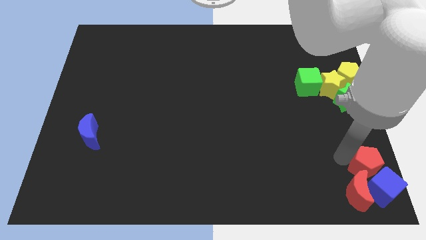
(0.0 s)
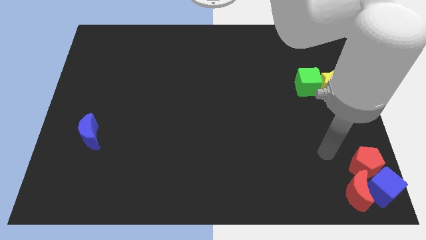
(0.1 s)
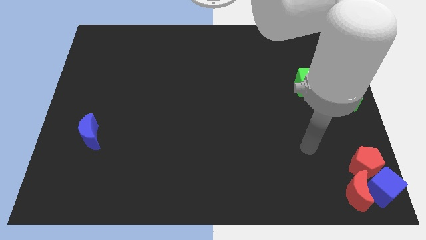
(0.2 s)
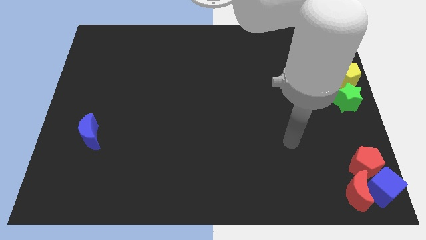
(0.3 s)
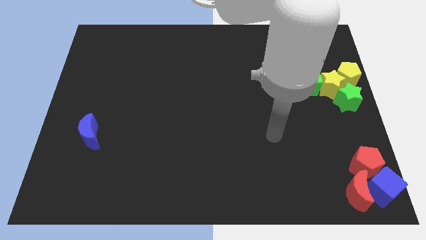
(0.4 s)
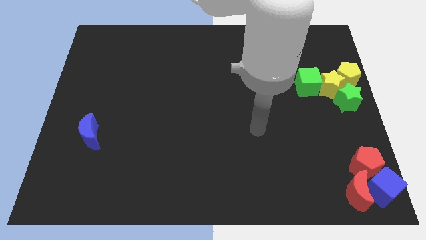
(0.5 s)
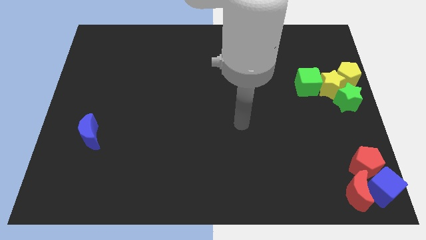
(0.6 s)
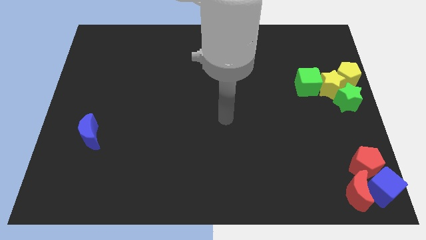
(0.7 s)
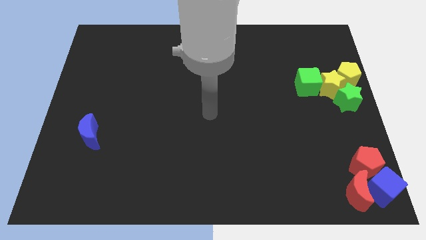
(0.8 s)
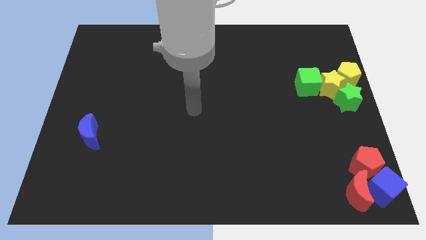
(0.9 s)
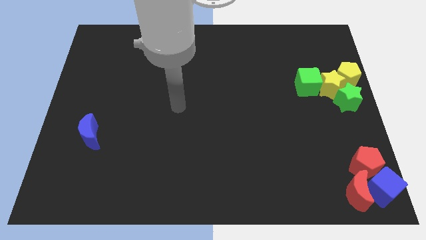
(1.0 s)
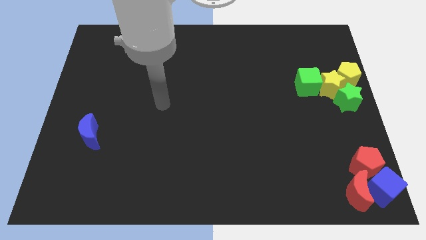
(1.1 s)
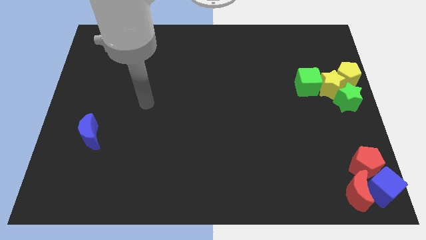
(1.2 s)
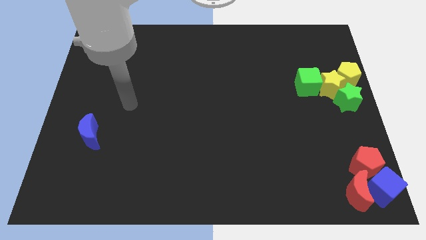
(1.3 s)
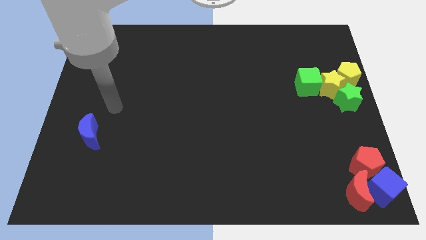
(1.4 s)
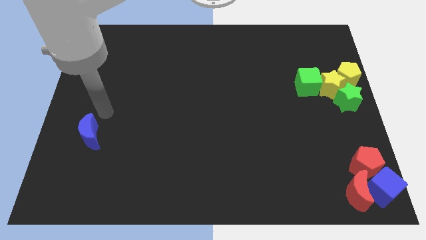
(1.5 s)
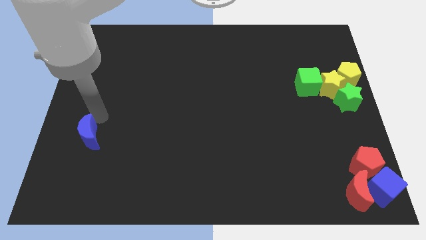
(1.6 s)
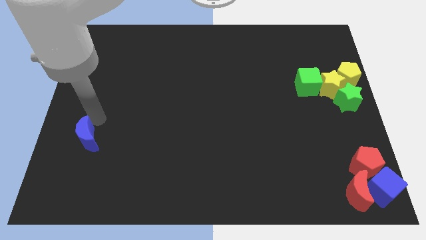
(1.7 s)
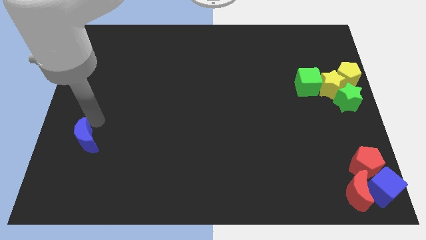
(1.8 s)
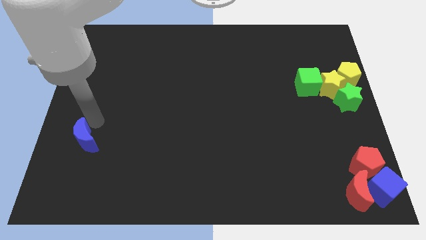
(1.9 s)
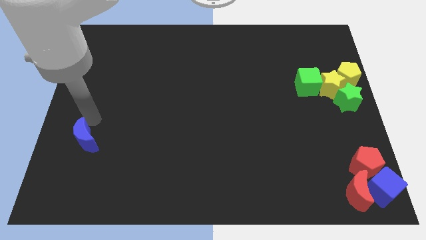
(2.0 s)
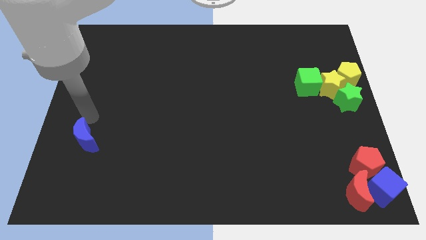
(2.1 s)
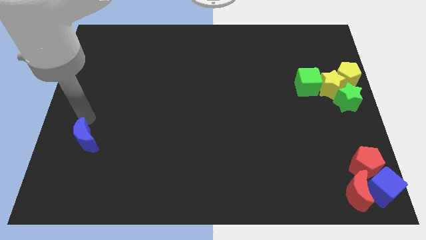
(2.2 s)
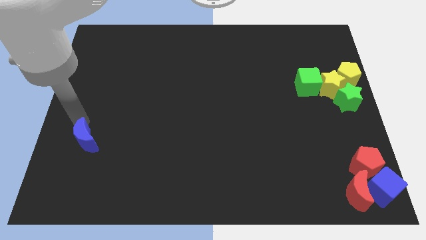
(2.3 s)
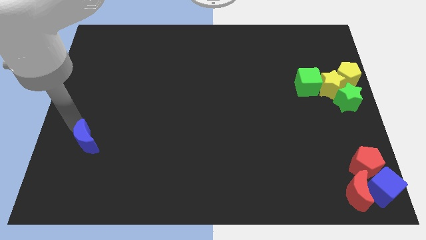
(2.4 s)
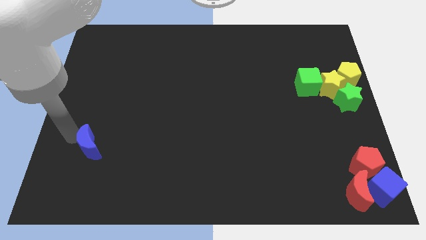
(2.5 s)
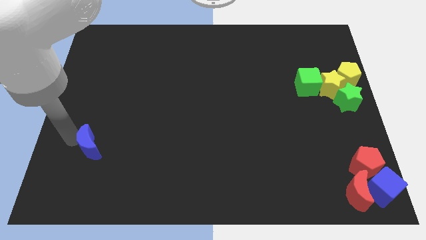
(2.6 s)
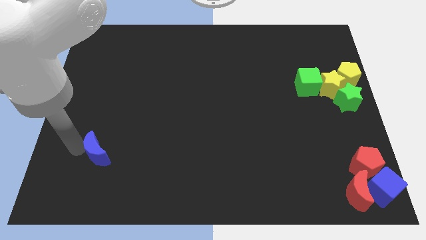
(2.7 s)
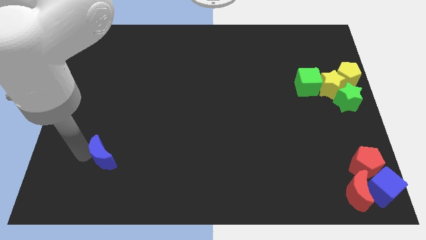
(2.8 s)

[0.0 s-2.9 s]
move blue crescent slightly down

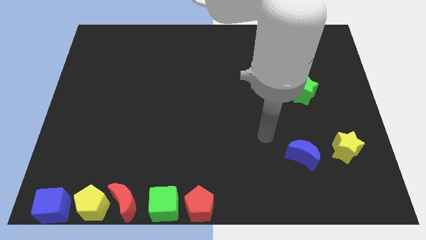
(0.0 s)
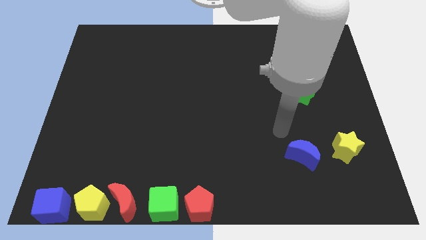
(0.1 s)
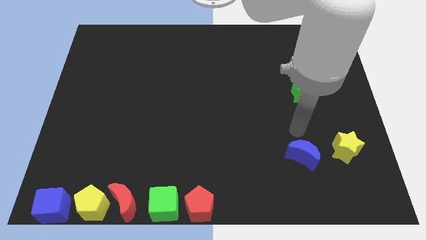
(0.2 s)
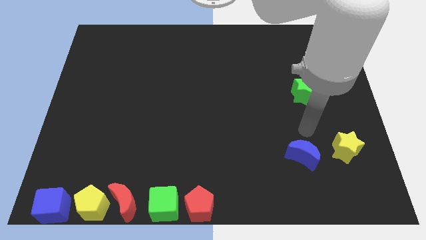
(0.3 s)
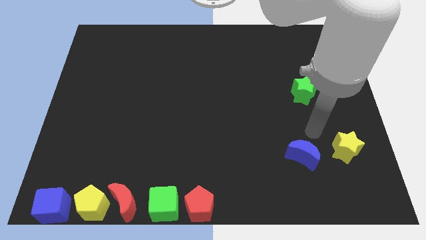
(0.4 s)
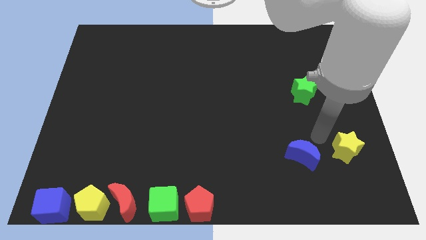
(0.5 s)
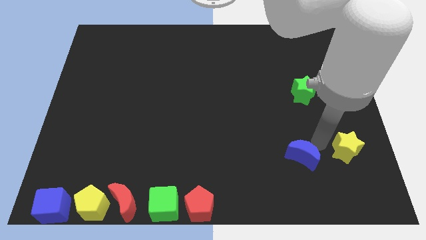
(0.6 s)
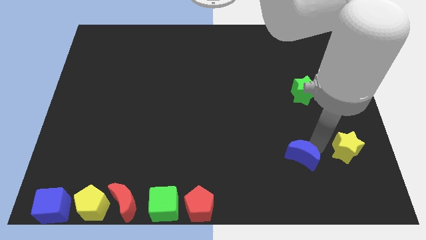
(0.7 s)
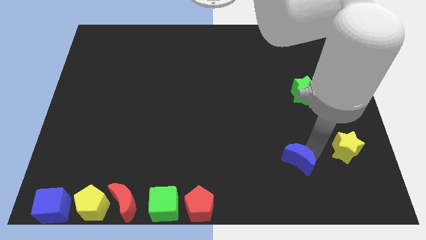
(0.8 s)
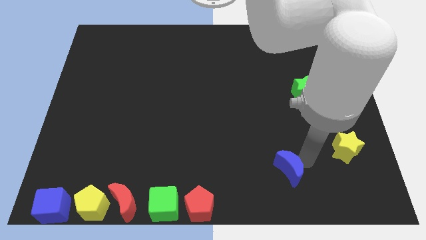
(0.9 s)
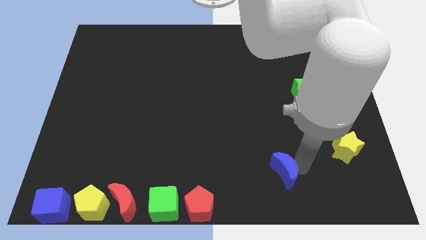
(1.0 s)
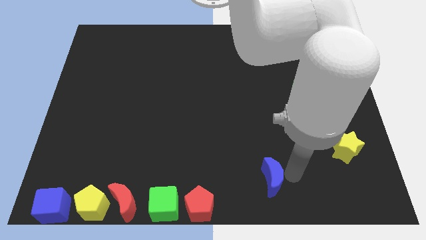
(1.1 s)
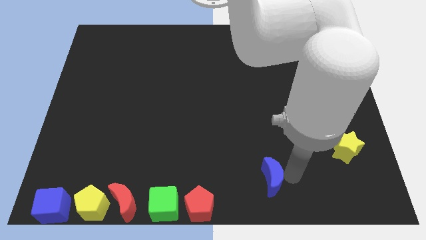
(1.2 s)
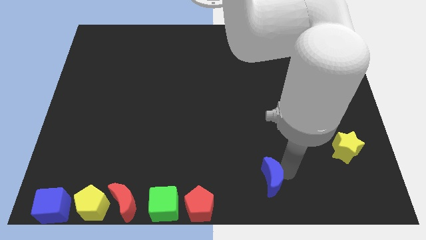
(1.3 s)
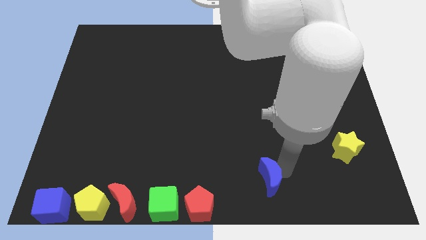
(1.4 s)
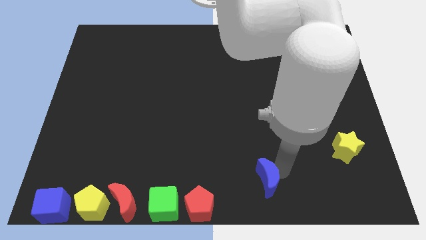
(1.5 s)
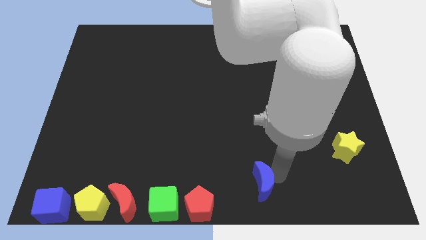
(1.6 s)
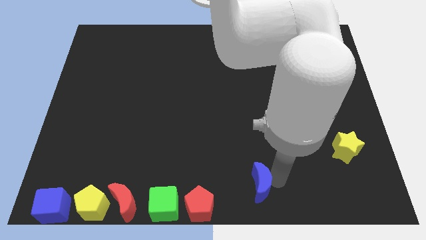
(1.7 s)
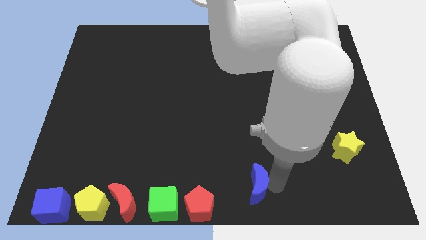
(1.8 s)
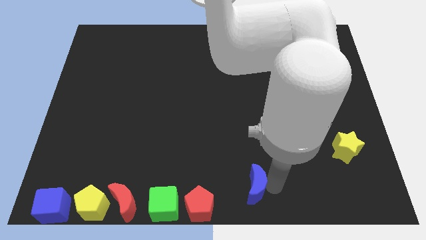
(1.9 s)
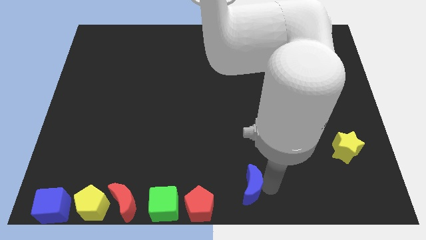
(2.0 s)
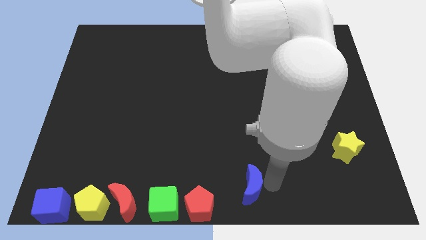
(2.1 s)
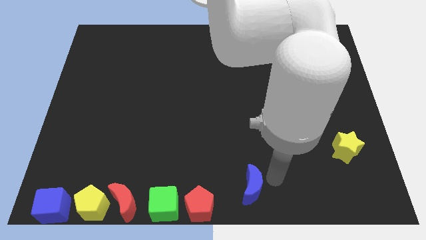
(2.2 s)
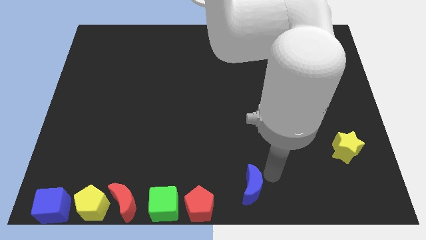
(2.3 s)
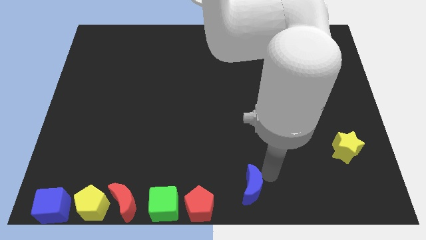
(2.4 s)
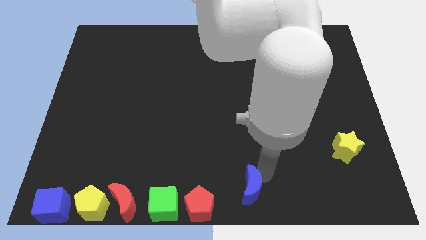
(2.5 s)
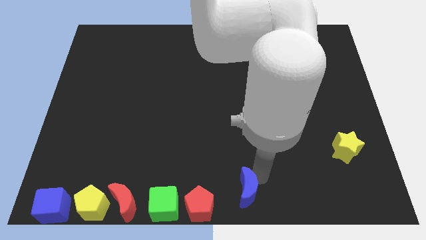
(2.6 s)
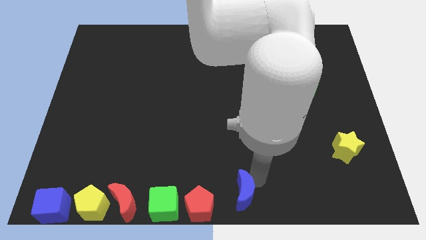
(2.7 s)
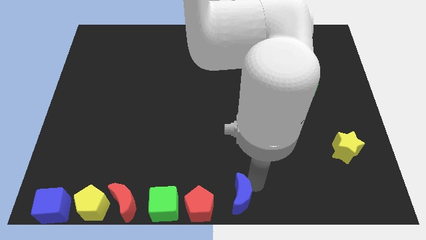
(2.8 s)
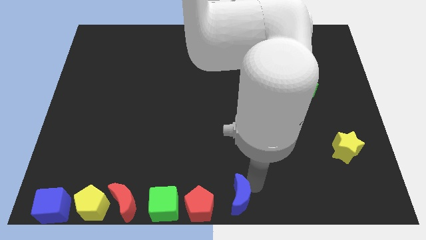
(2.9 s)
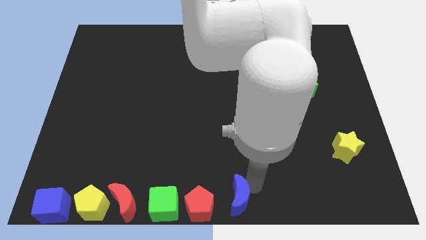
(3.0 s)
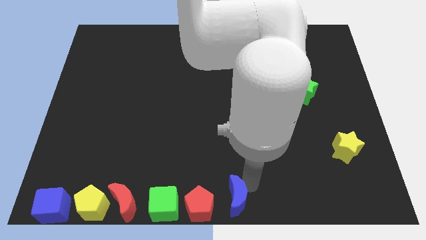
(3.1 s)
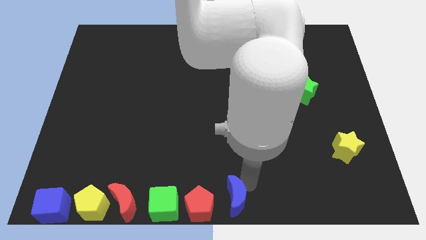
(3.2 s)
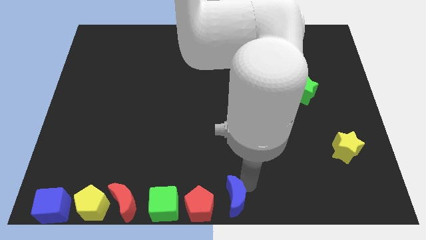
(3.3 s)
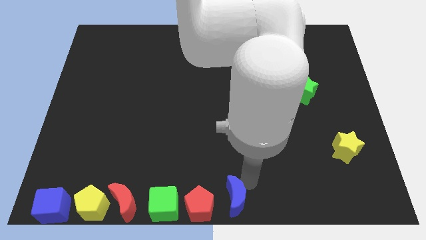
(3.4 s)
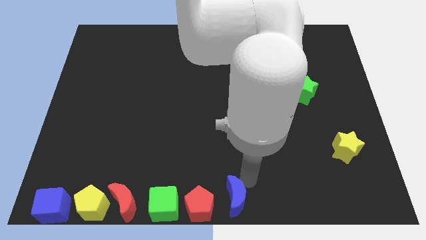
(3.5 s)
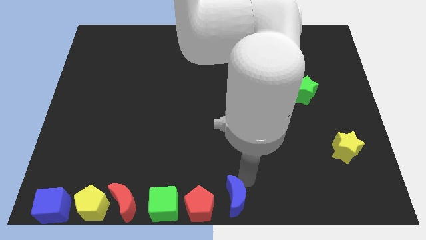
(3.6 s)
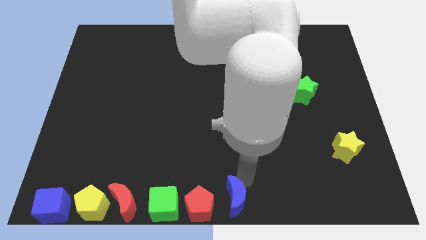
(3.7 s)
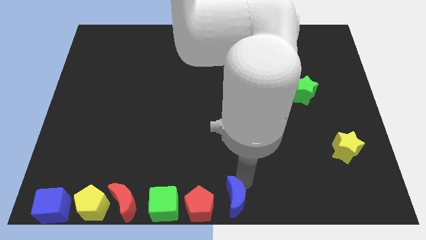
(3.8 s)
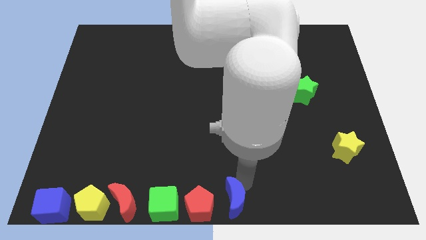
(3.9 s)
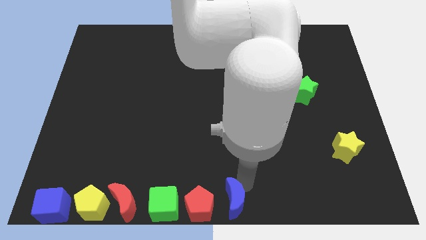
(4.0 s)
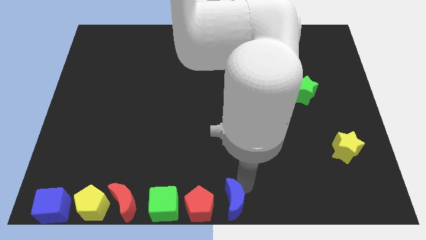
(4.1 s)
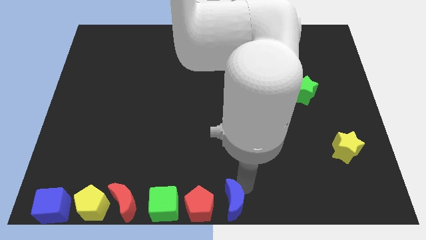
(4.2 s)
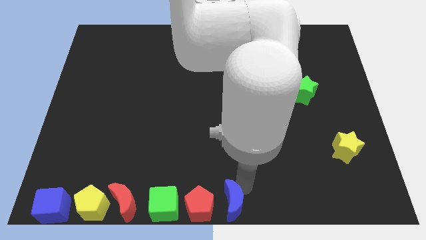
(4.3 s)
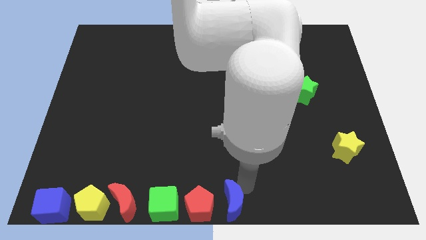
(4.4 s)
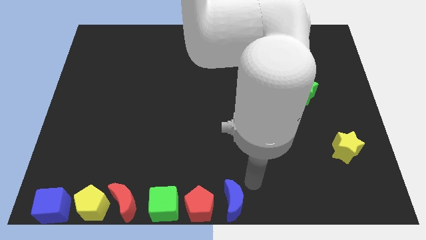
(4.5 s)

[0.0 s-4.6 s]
move blue crescent on the right side of the red pentagon

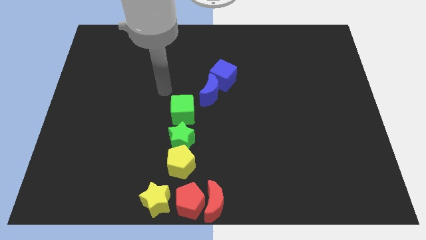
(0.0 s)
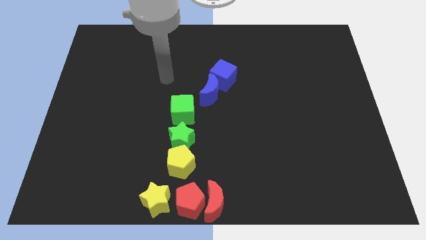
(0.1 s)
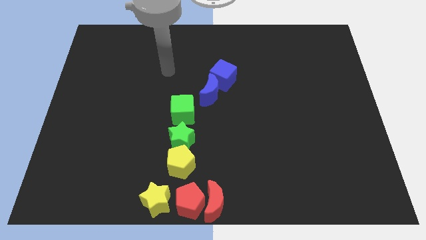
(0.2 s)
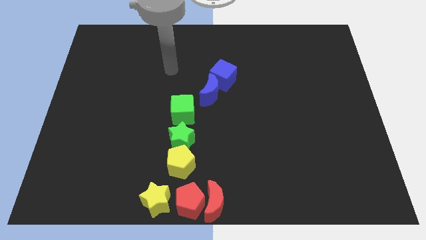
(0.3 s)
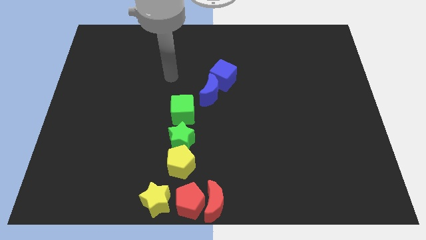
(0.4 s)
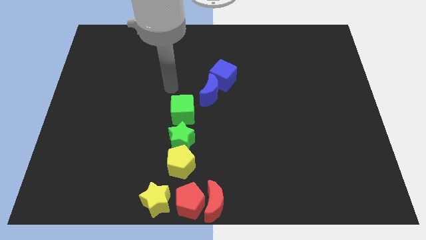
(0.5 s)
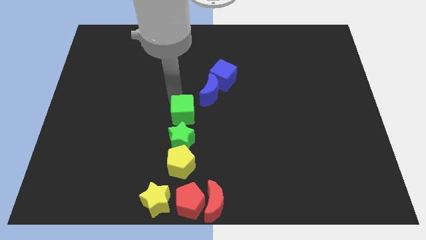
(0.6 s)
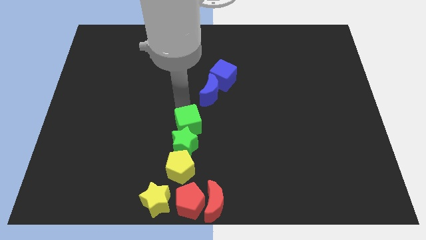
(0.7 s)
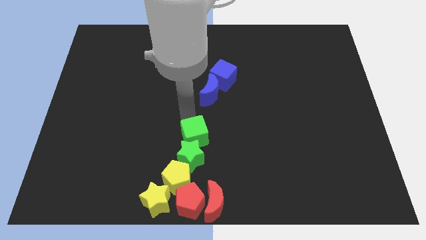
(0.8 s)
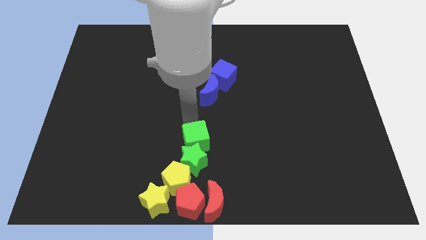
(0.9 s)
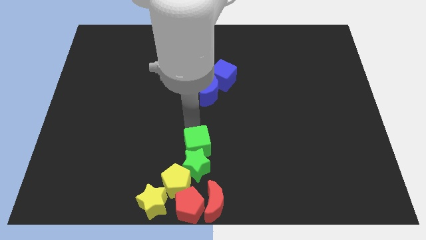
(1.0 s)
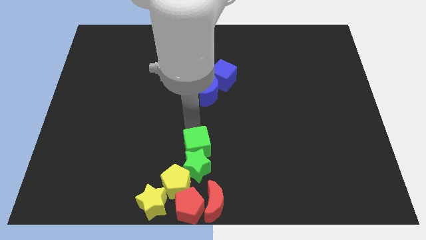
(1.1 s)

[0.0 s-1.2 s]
move the vertical line of blocks to the bottom center

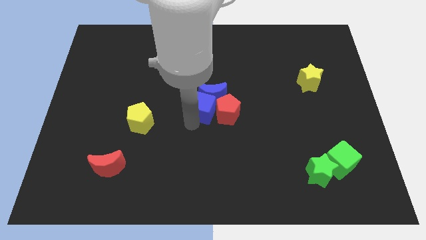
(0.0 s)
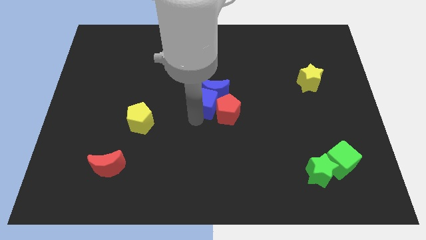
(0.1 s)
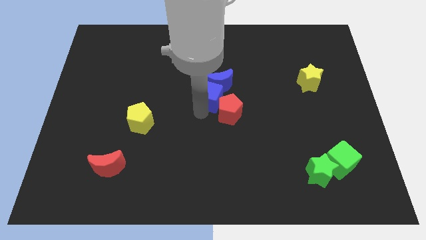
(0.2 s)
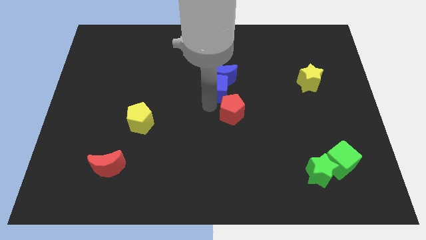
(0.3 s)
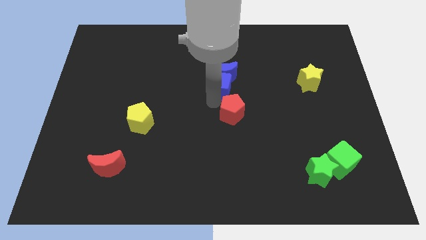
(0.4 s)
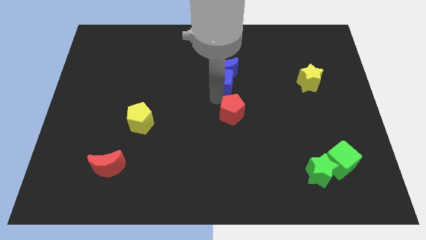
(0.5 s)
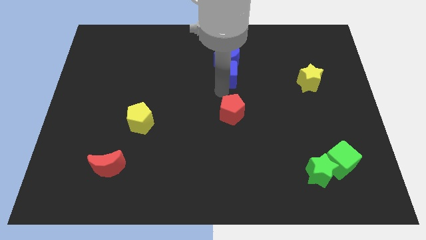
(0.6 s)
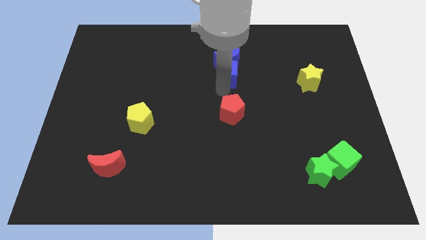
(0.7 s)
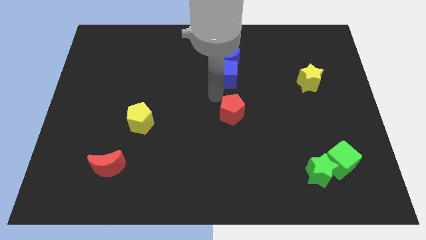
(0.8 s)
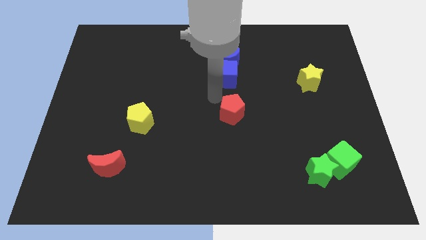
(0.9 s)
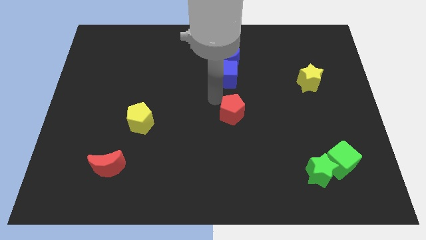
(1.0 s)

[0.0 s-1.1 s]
place blue cube and blue crescent above red pentagon
